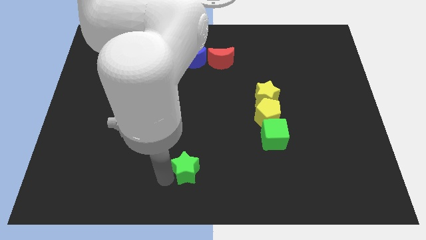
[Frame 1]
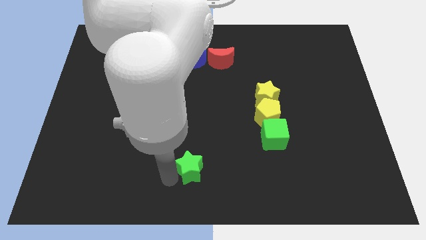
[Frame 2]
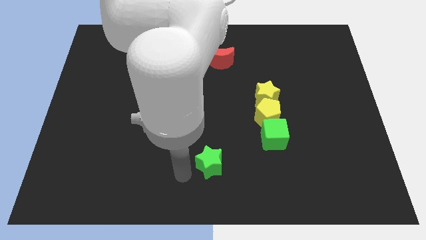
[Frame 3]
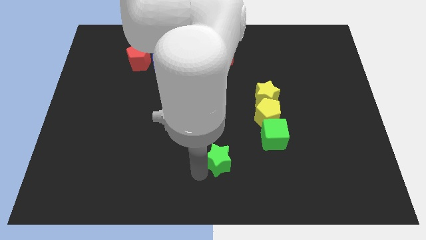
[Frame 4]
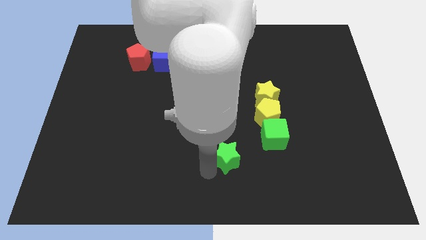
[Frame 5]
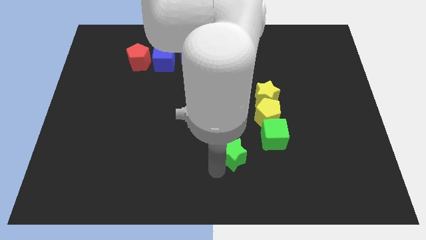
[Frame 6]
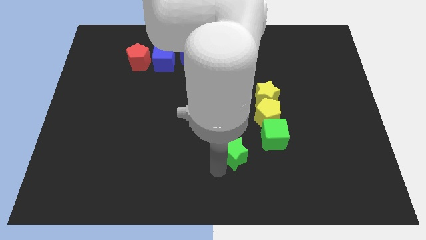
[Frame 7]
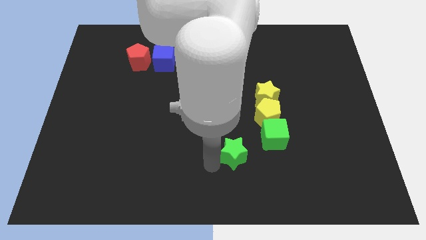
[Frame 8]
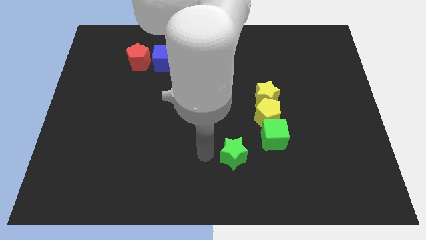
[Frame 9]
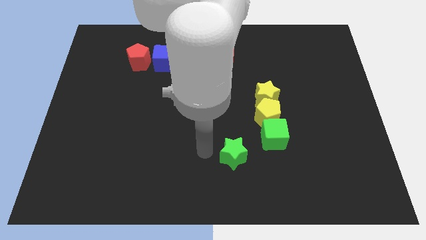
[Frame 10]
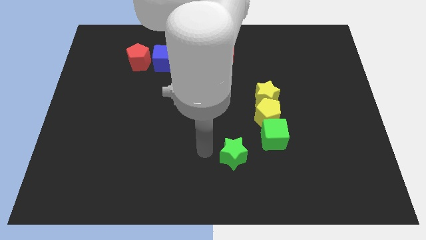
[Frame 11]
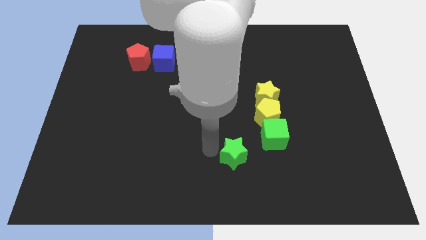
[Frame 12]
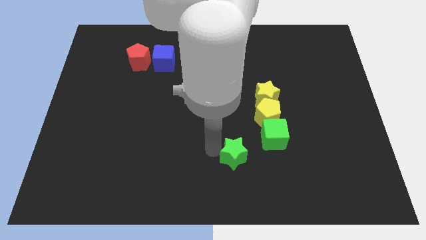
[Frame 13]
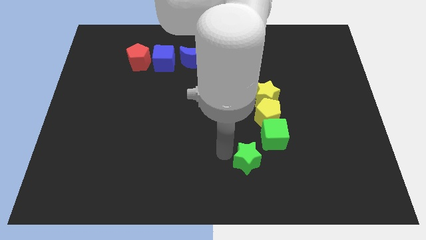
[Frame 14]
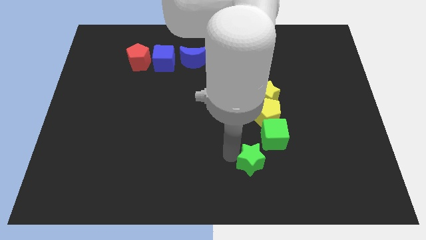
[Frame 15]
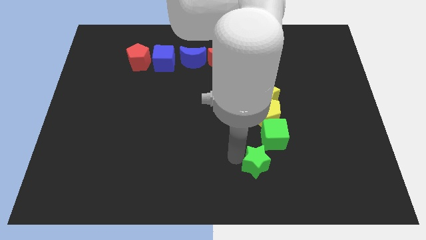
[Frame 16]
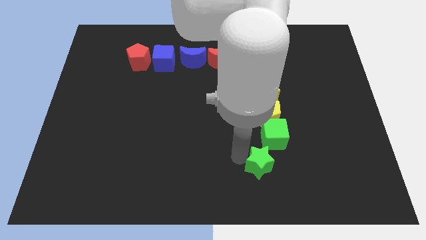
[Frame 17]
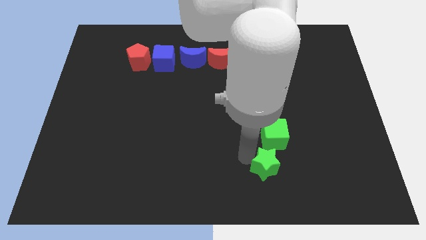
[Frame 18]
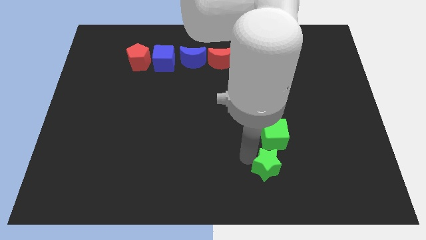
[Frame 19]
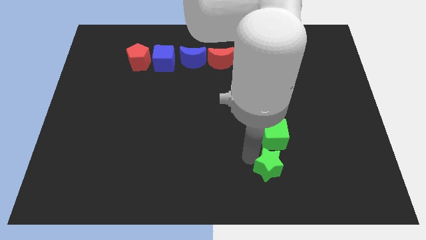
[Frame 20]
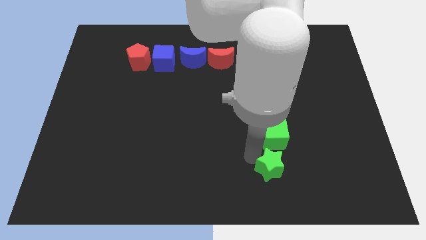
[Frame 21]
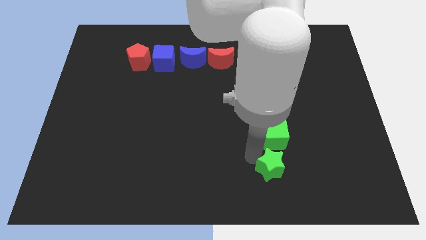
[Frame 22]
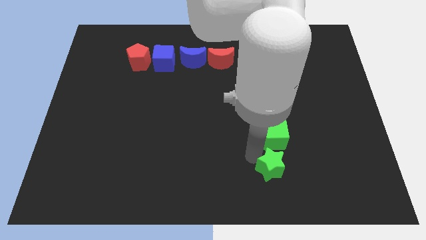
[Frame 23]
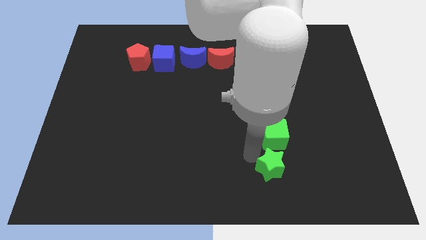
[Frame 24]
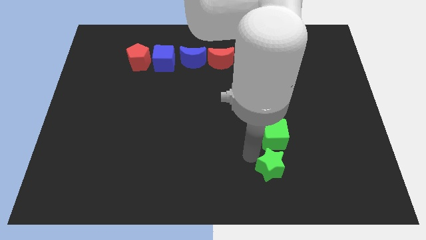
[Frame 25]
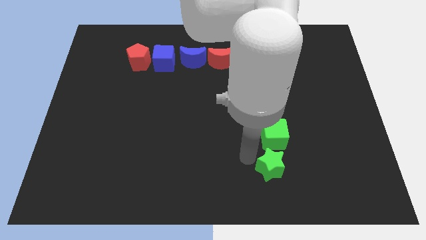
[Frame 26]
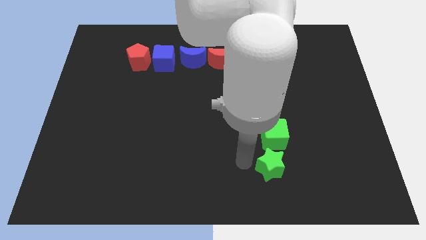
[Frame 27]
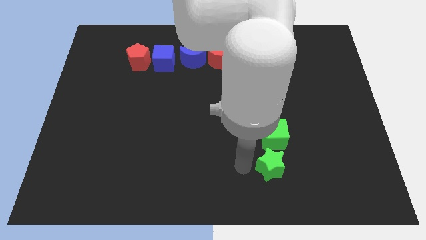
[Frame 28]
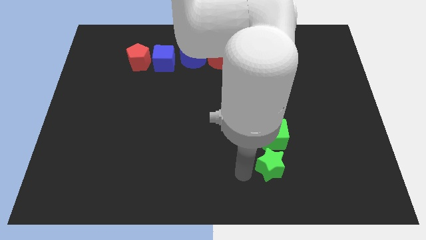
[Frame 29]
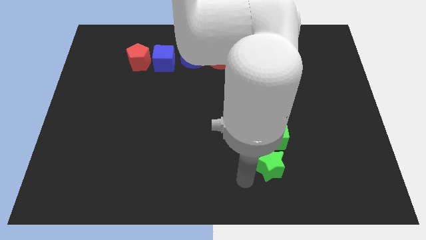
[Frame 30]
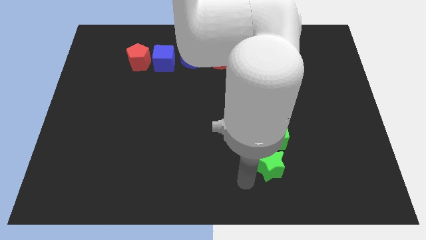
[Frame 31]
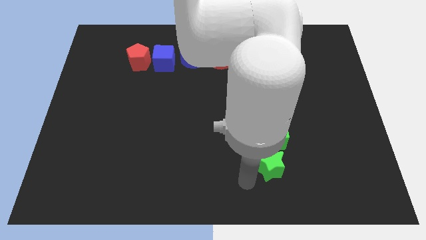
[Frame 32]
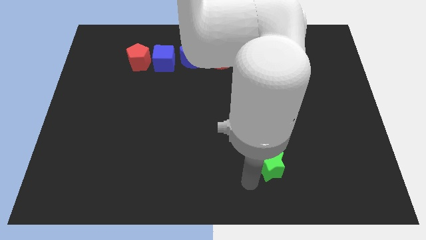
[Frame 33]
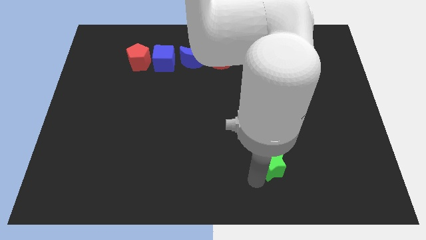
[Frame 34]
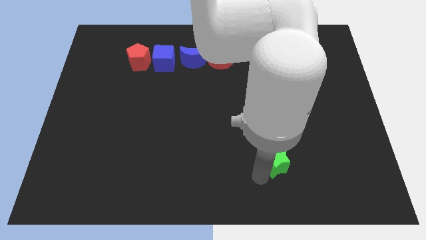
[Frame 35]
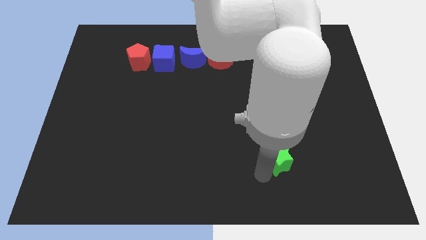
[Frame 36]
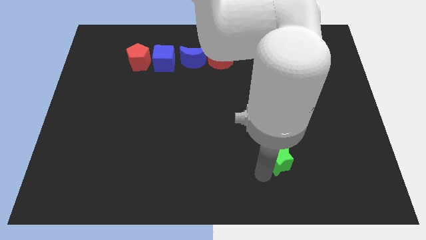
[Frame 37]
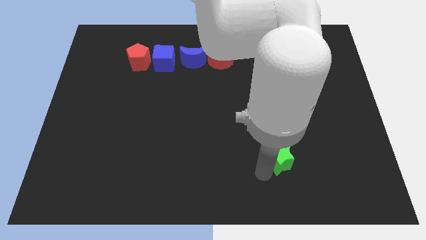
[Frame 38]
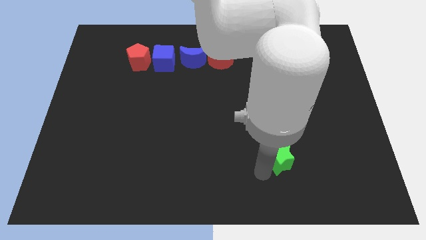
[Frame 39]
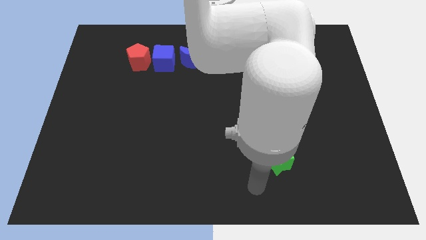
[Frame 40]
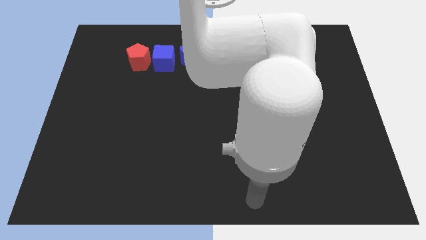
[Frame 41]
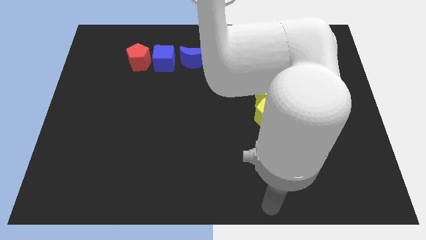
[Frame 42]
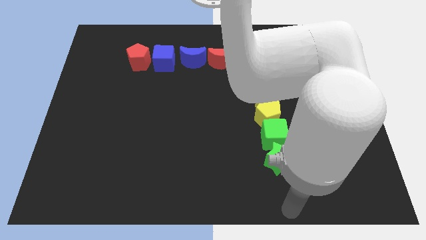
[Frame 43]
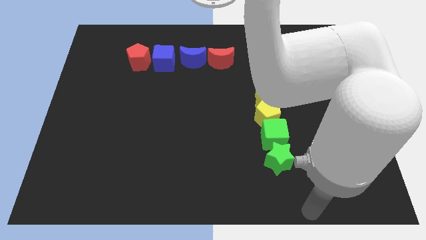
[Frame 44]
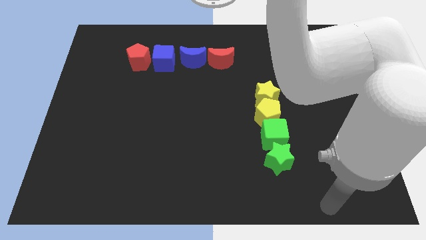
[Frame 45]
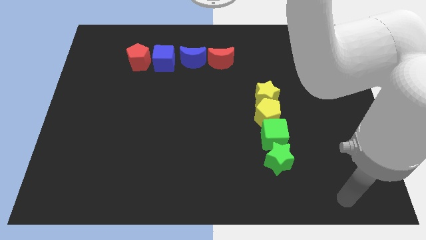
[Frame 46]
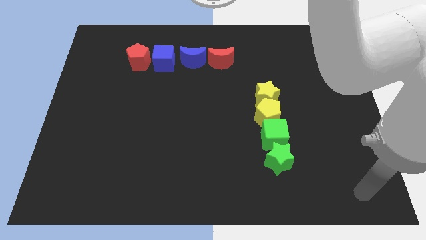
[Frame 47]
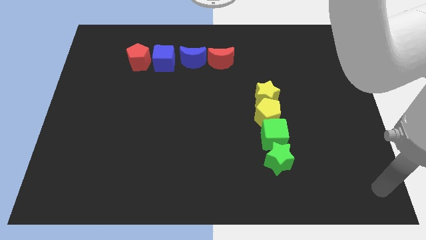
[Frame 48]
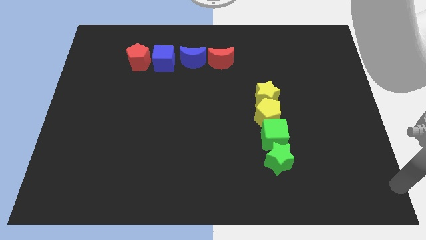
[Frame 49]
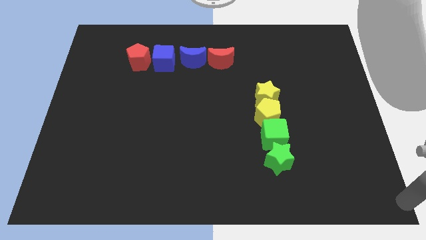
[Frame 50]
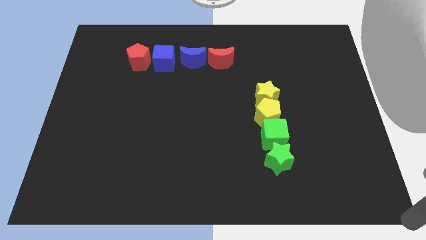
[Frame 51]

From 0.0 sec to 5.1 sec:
move the green star below the green cube

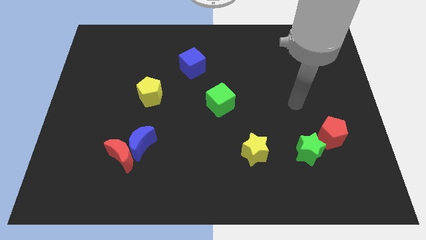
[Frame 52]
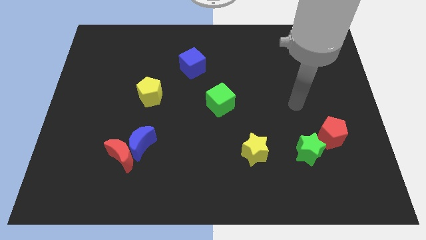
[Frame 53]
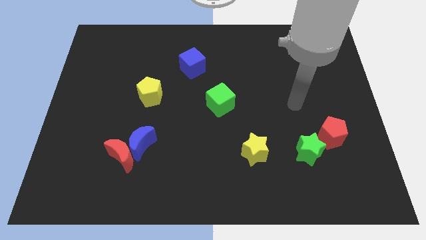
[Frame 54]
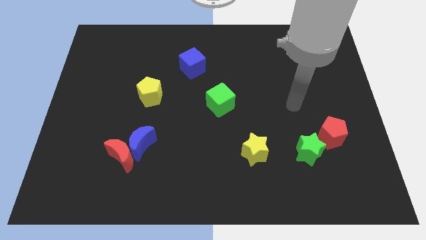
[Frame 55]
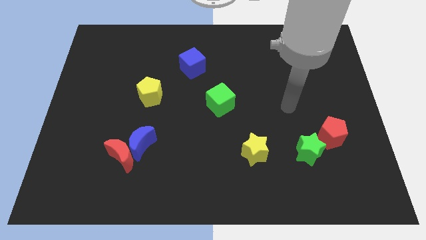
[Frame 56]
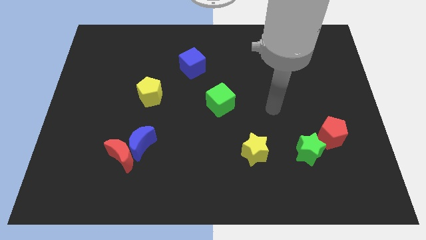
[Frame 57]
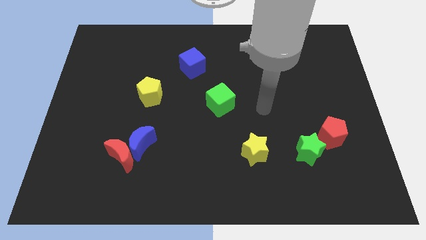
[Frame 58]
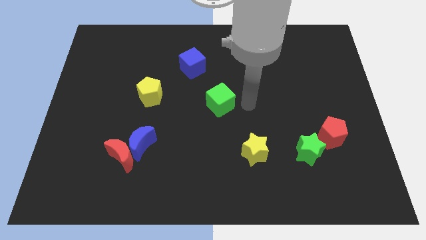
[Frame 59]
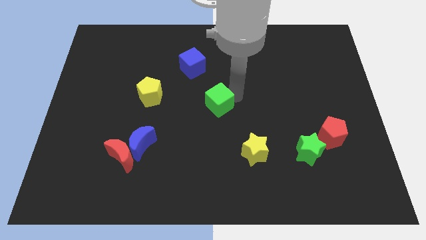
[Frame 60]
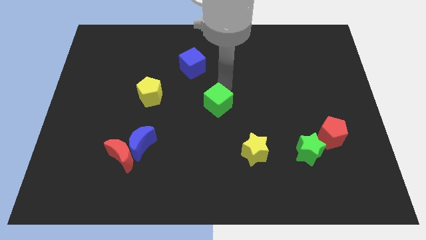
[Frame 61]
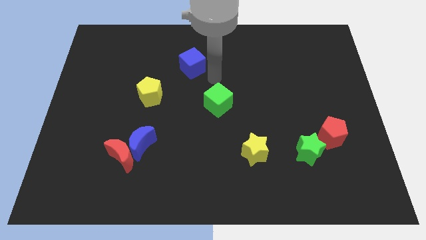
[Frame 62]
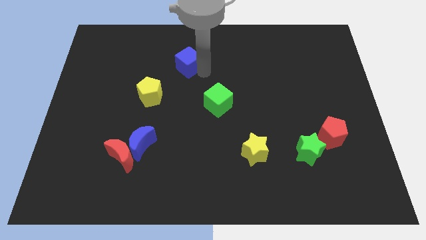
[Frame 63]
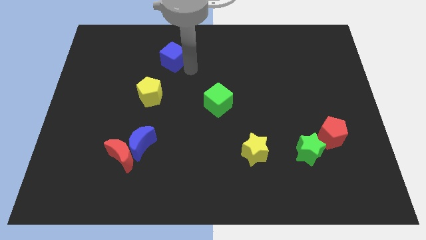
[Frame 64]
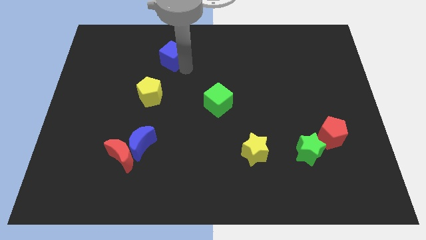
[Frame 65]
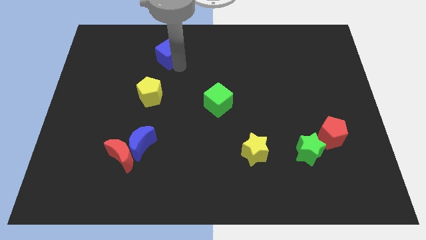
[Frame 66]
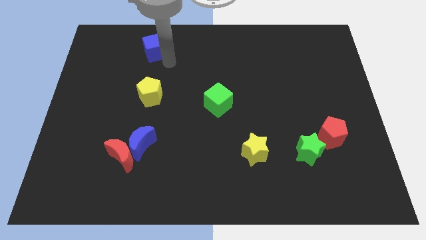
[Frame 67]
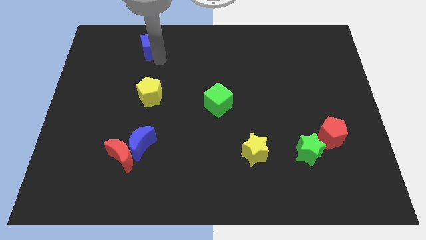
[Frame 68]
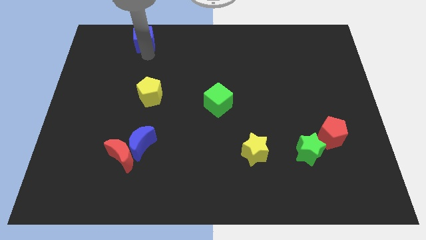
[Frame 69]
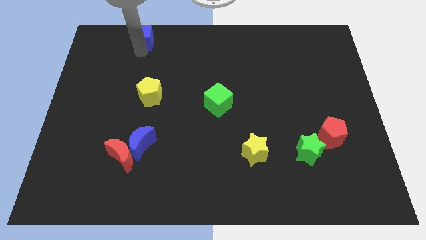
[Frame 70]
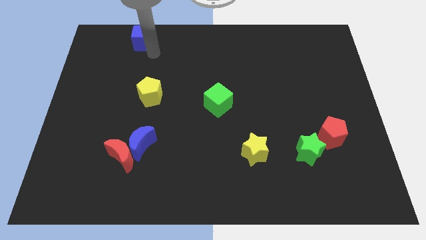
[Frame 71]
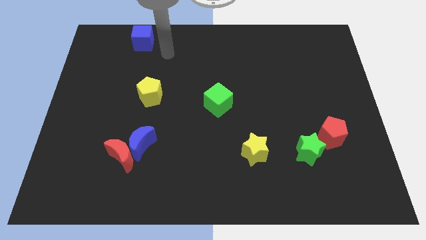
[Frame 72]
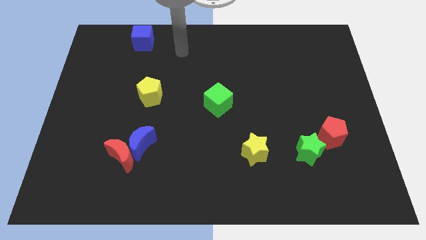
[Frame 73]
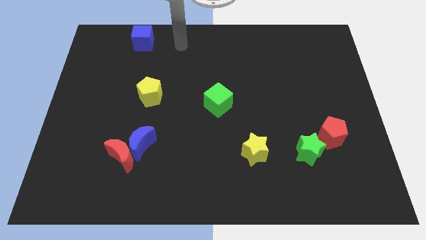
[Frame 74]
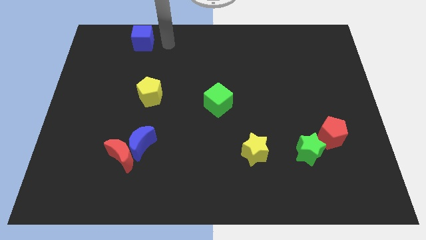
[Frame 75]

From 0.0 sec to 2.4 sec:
push the blue cube towards the top side of the board

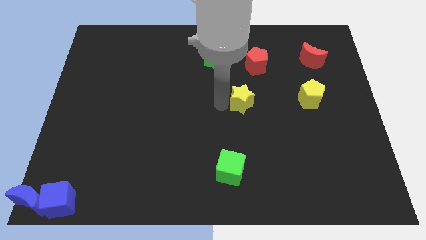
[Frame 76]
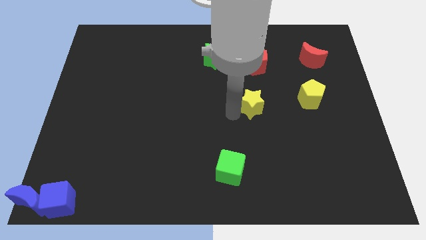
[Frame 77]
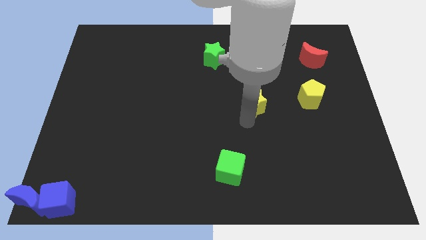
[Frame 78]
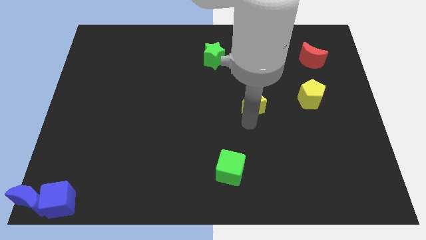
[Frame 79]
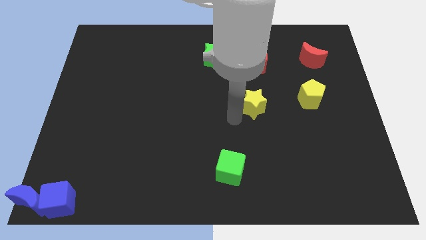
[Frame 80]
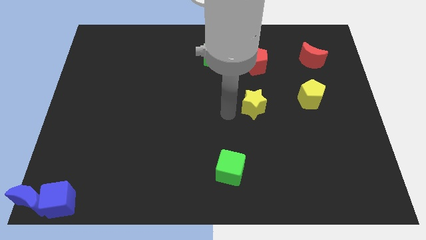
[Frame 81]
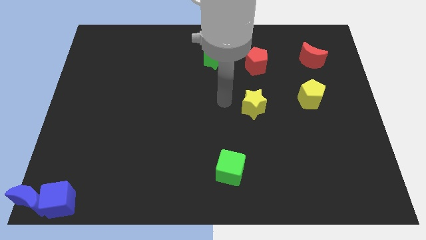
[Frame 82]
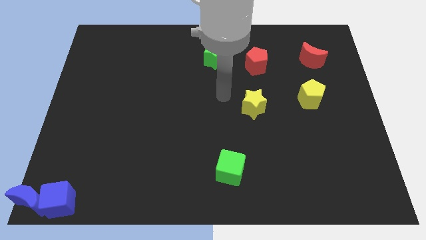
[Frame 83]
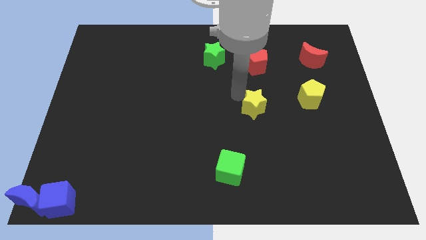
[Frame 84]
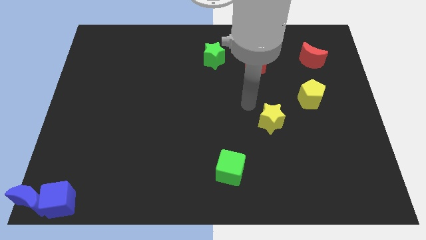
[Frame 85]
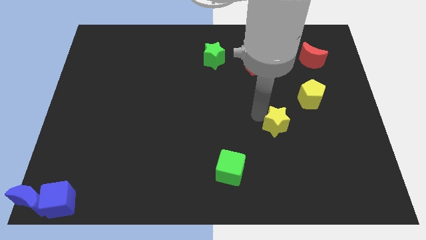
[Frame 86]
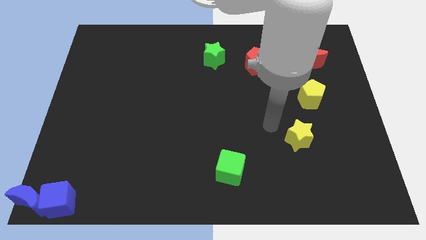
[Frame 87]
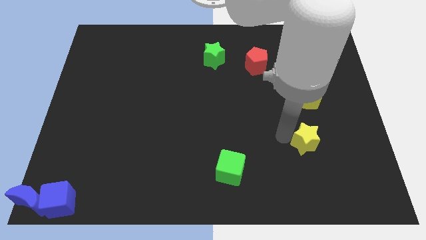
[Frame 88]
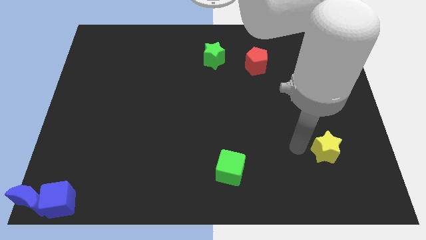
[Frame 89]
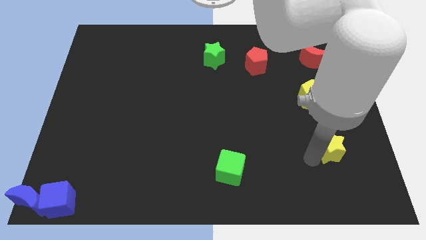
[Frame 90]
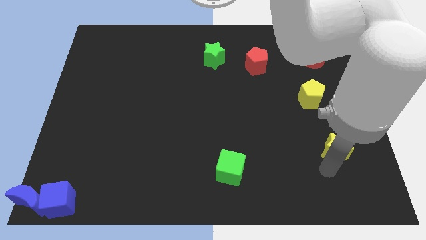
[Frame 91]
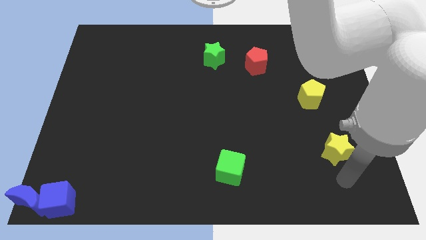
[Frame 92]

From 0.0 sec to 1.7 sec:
place the yellow star vertically below the yellow pentagon
